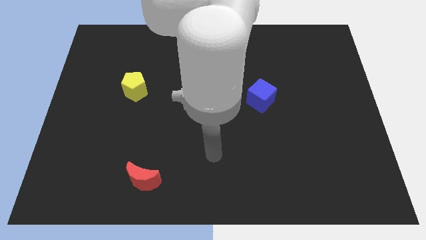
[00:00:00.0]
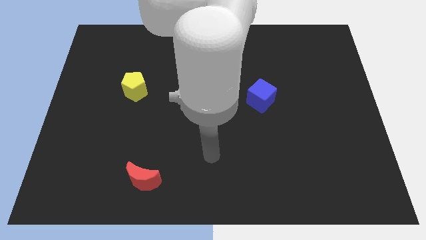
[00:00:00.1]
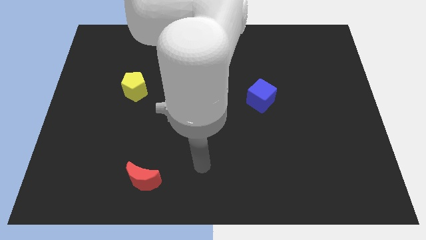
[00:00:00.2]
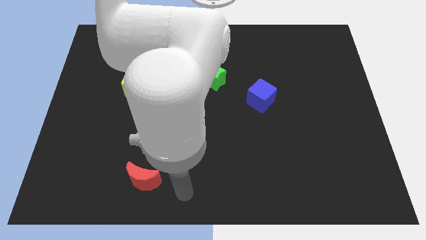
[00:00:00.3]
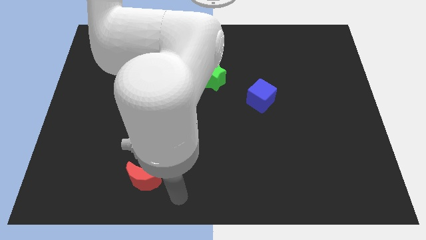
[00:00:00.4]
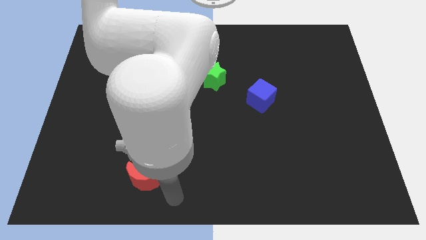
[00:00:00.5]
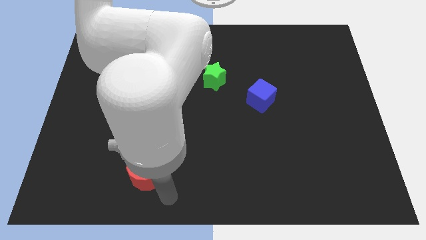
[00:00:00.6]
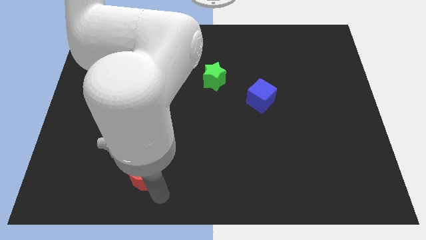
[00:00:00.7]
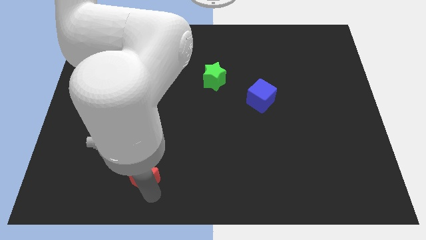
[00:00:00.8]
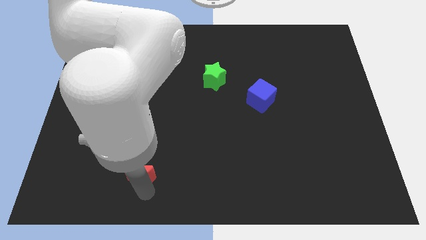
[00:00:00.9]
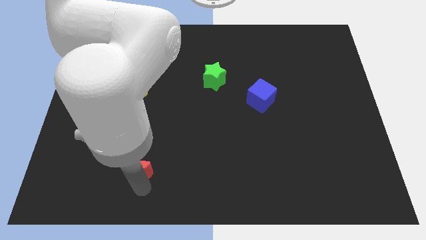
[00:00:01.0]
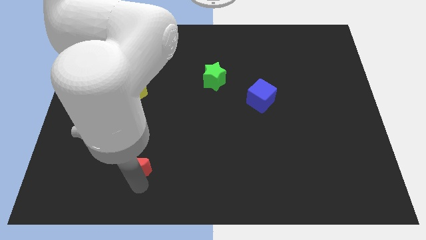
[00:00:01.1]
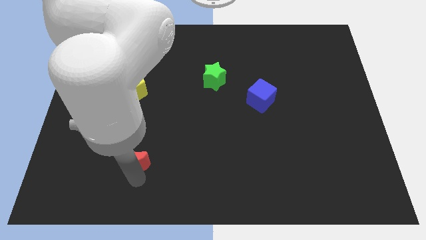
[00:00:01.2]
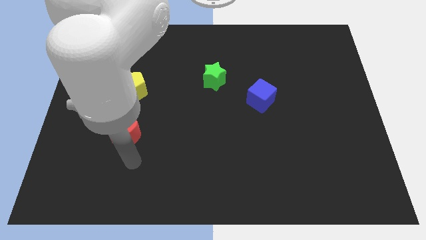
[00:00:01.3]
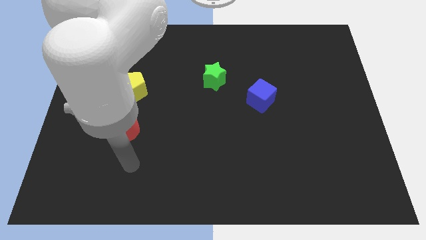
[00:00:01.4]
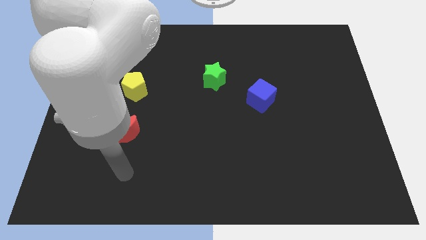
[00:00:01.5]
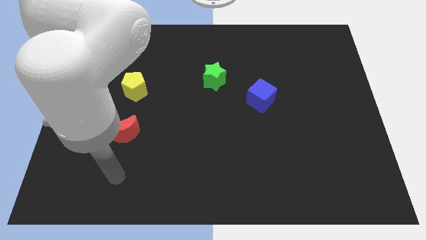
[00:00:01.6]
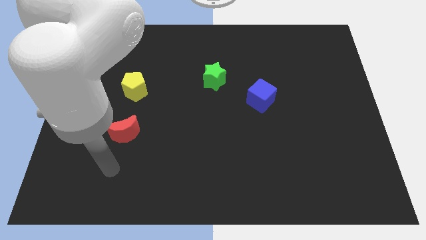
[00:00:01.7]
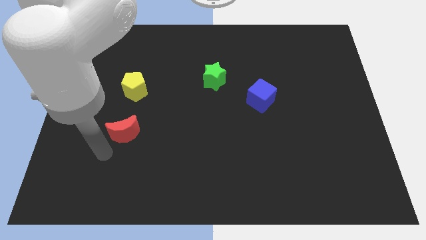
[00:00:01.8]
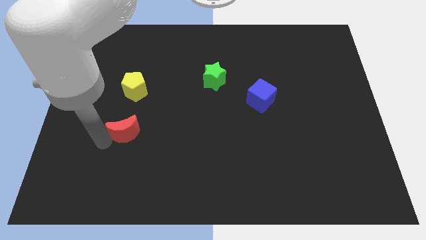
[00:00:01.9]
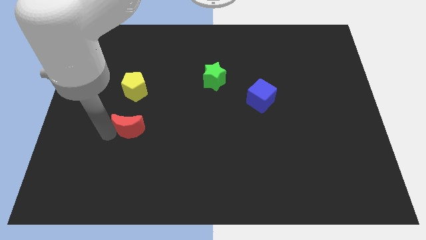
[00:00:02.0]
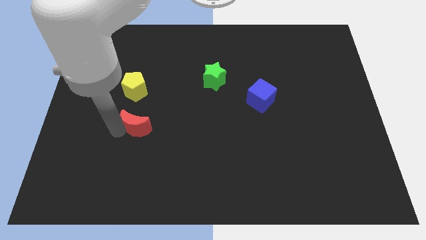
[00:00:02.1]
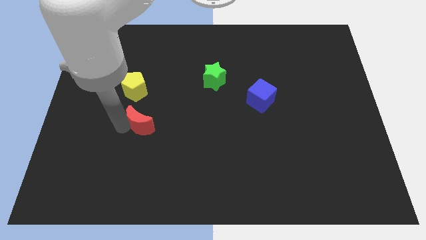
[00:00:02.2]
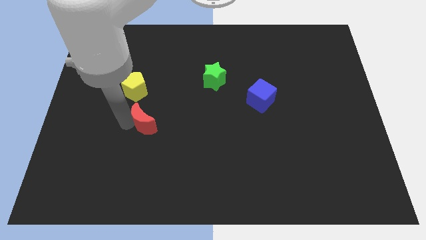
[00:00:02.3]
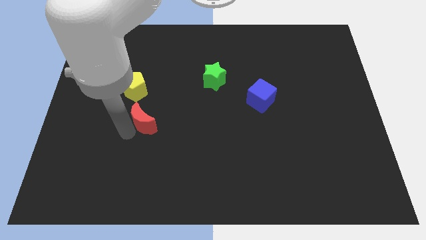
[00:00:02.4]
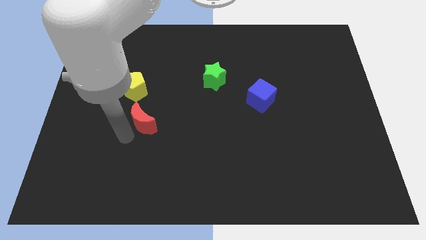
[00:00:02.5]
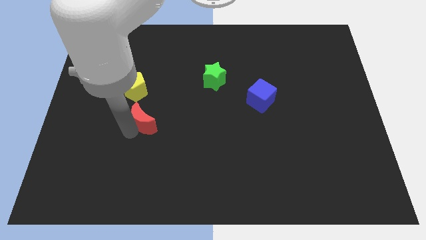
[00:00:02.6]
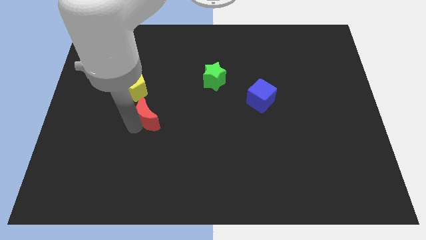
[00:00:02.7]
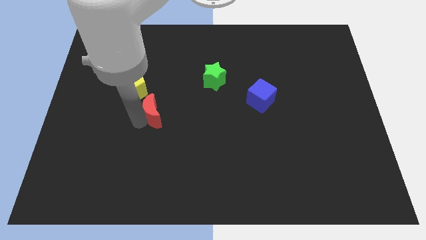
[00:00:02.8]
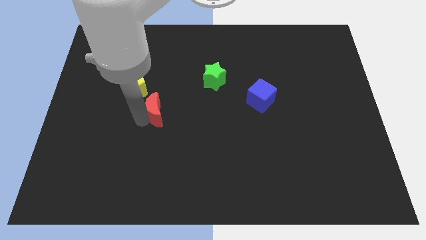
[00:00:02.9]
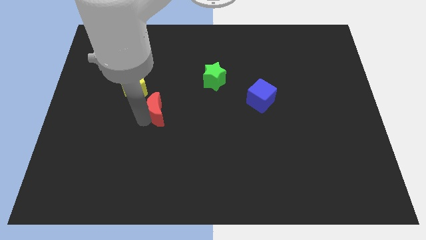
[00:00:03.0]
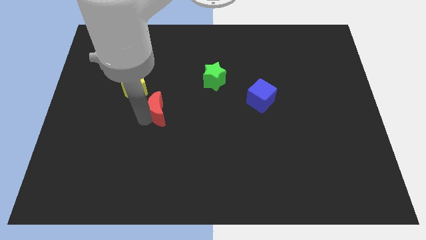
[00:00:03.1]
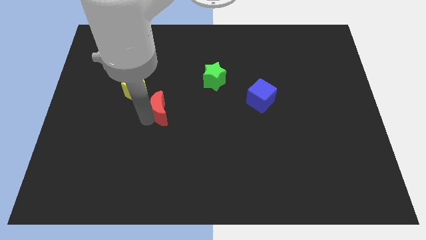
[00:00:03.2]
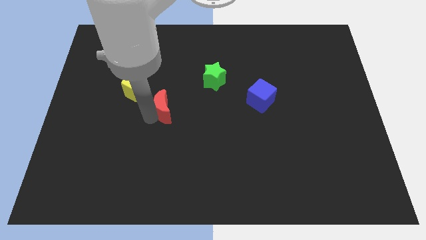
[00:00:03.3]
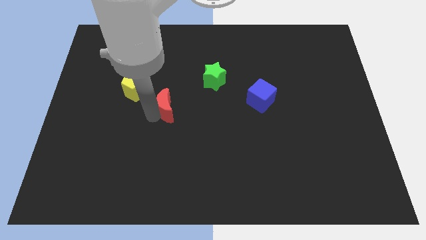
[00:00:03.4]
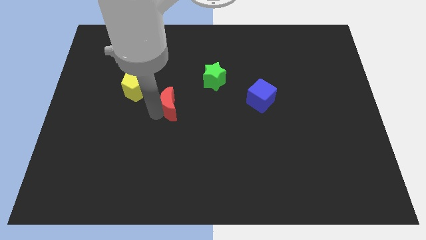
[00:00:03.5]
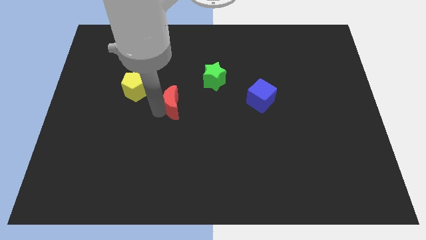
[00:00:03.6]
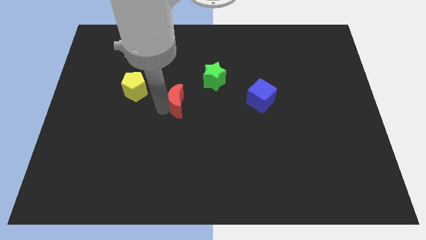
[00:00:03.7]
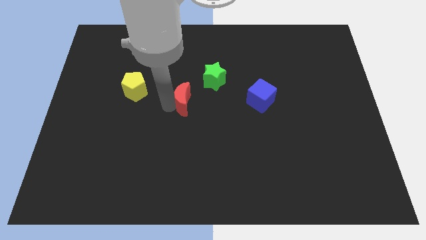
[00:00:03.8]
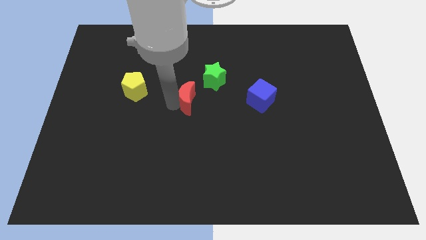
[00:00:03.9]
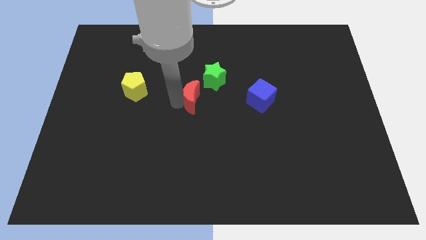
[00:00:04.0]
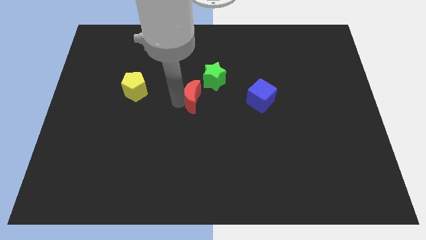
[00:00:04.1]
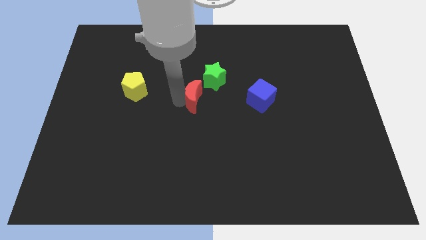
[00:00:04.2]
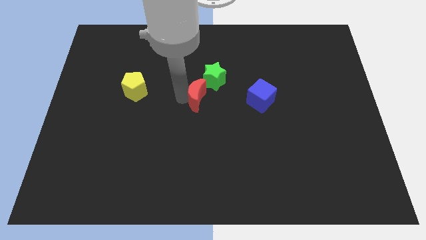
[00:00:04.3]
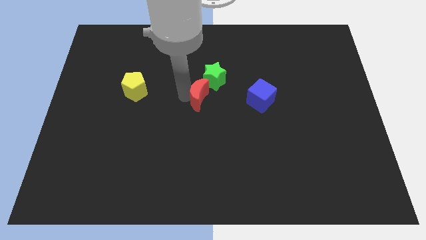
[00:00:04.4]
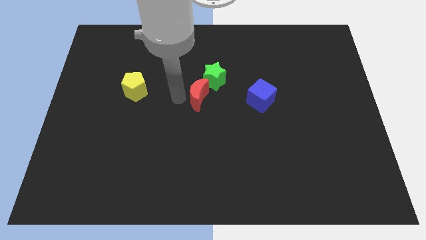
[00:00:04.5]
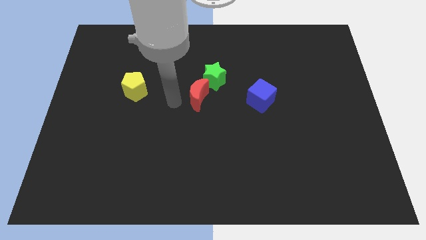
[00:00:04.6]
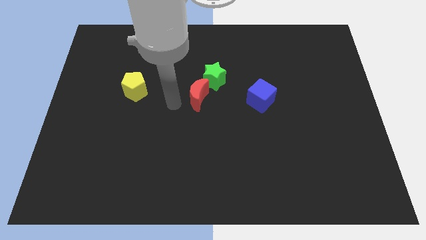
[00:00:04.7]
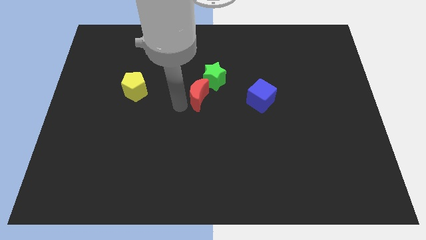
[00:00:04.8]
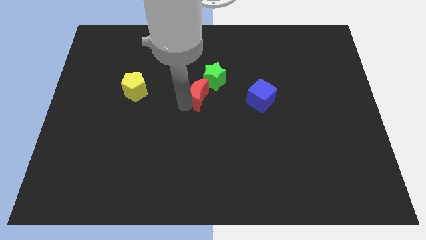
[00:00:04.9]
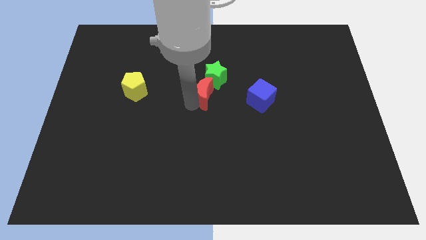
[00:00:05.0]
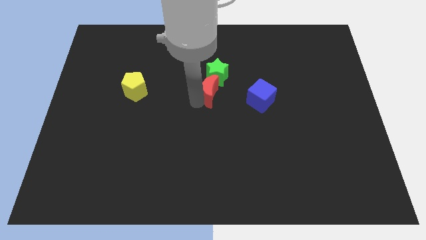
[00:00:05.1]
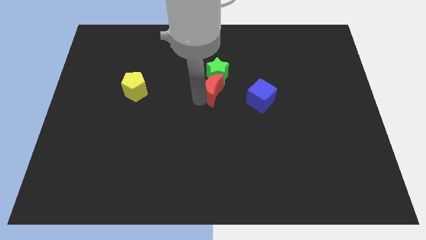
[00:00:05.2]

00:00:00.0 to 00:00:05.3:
move the moon to the star

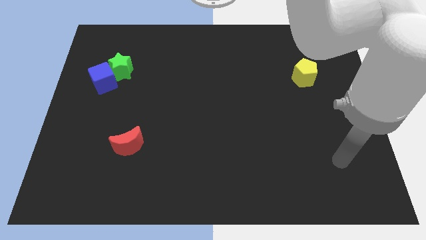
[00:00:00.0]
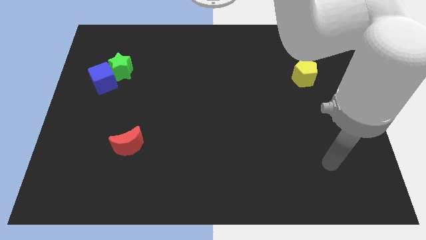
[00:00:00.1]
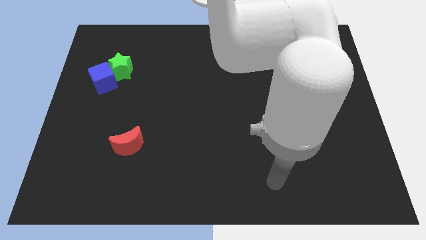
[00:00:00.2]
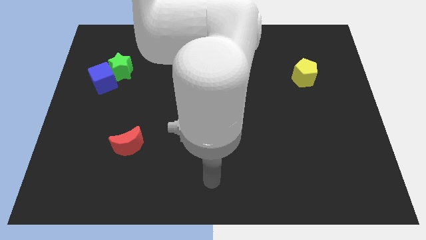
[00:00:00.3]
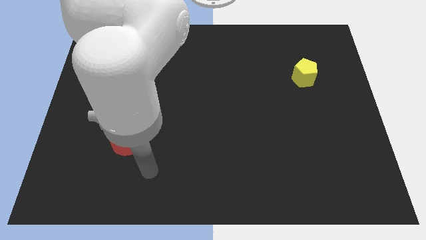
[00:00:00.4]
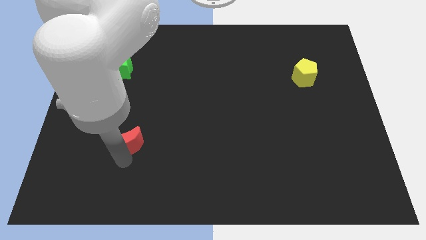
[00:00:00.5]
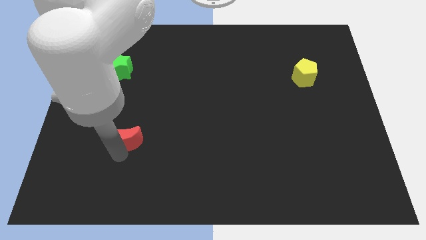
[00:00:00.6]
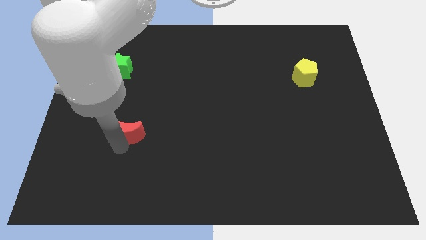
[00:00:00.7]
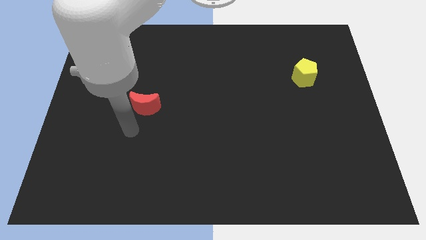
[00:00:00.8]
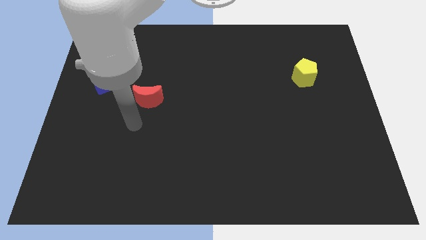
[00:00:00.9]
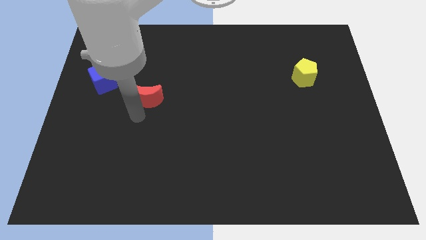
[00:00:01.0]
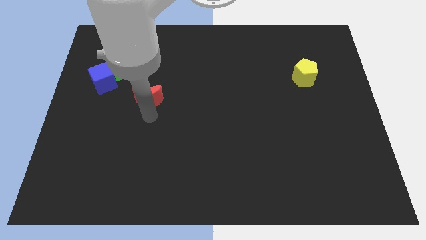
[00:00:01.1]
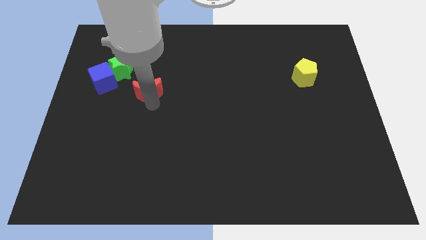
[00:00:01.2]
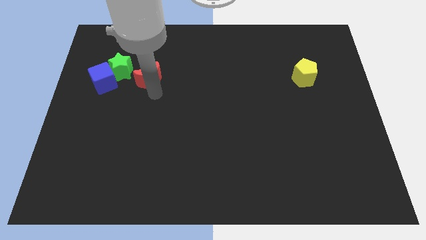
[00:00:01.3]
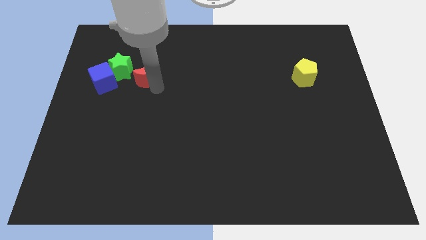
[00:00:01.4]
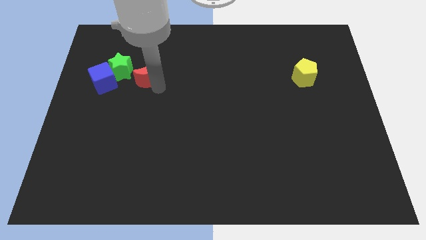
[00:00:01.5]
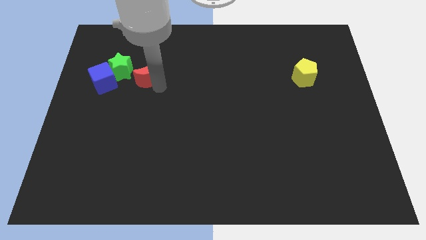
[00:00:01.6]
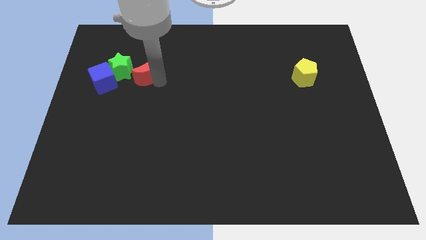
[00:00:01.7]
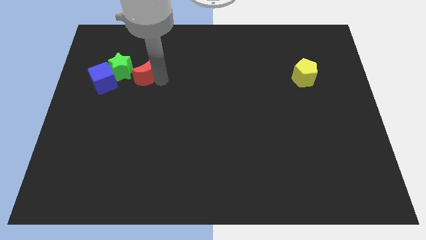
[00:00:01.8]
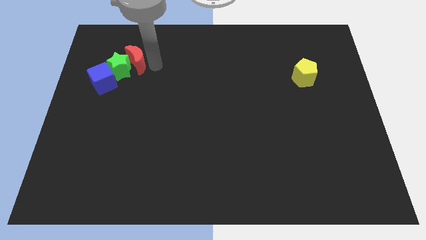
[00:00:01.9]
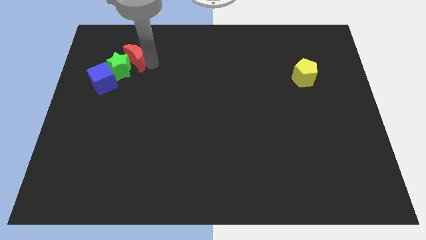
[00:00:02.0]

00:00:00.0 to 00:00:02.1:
move the moon towards the star

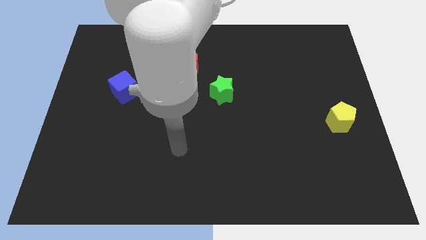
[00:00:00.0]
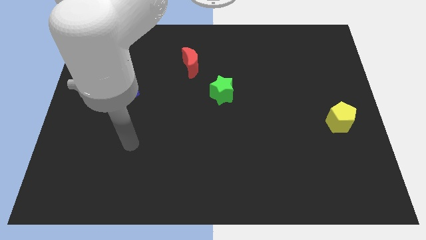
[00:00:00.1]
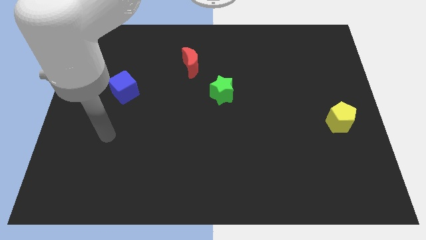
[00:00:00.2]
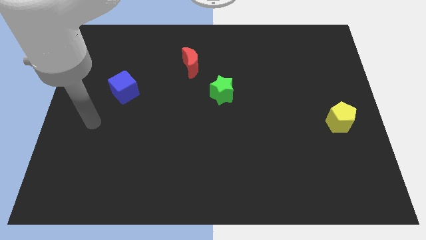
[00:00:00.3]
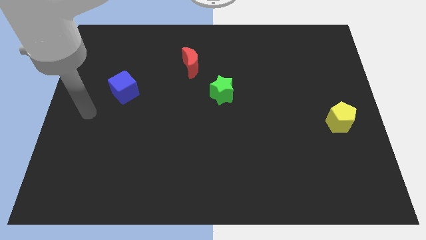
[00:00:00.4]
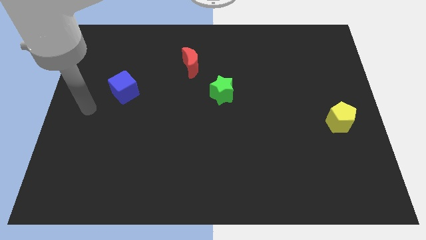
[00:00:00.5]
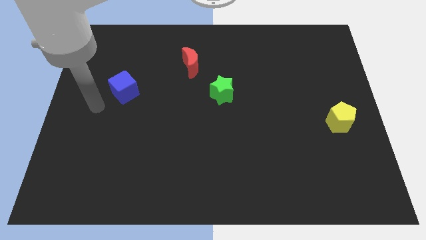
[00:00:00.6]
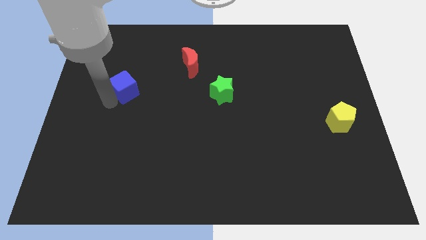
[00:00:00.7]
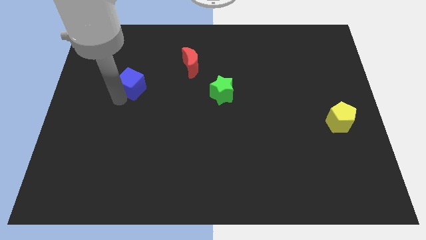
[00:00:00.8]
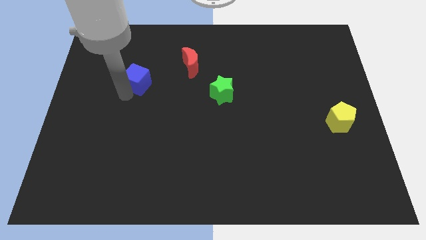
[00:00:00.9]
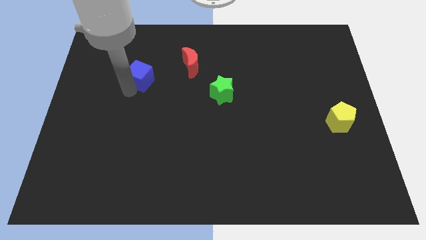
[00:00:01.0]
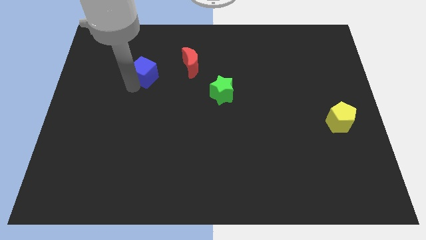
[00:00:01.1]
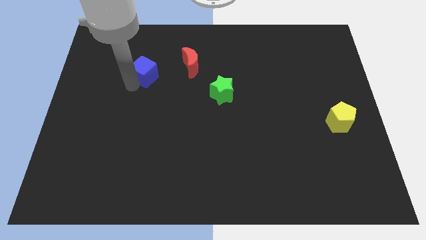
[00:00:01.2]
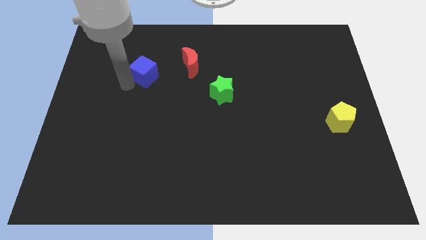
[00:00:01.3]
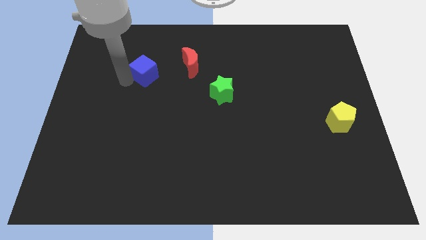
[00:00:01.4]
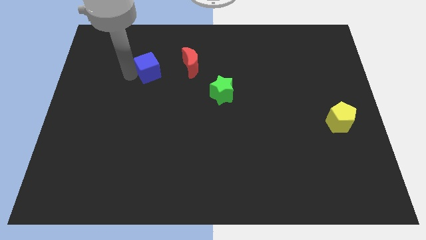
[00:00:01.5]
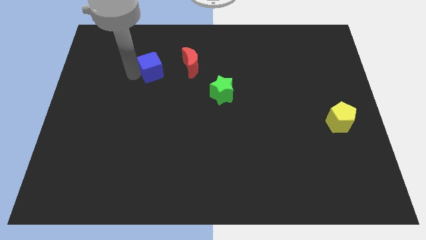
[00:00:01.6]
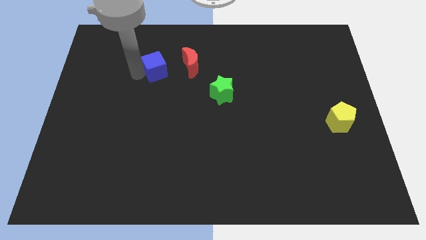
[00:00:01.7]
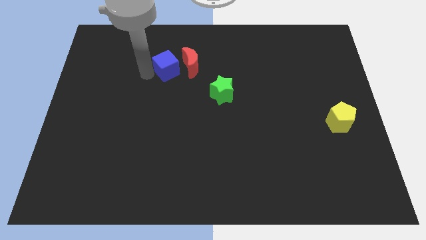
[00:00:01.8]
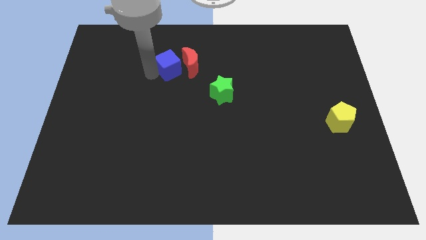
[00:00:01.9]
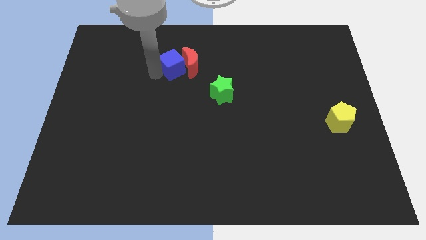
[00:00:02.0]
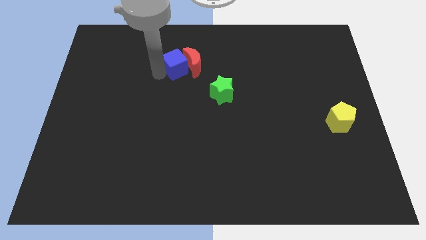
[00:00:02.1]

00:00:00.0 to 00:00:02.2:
push the blue block next to the red moon
